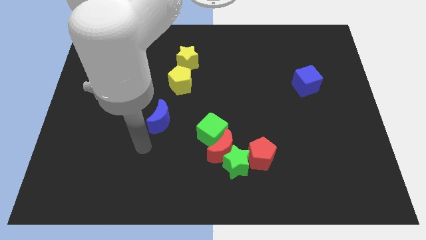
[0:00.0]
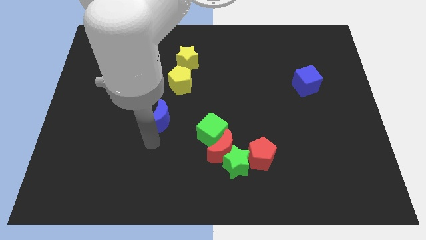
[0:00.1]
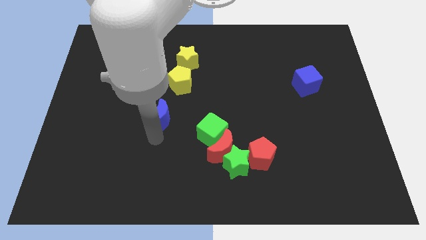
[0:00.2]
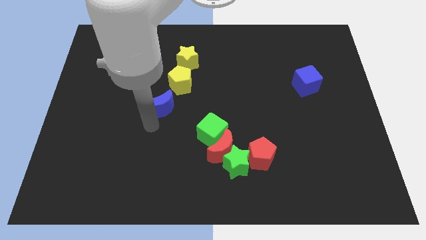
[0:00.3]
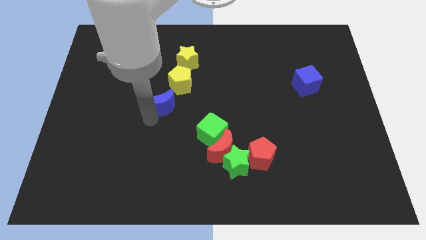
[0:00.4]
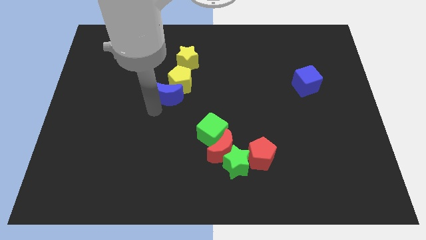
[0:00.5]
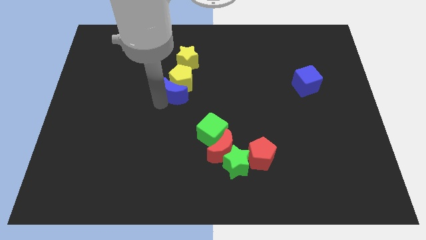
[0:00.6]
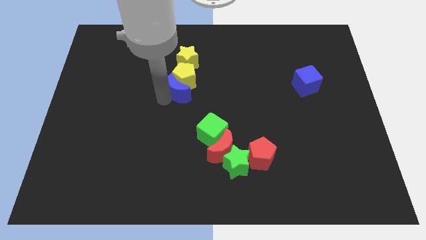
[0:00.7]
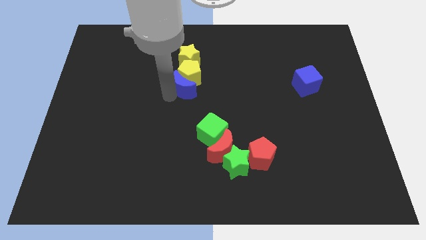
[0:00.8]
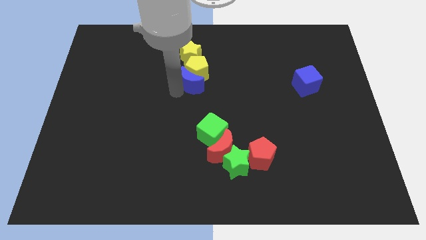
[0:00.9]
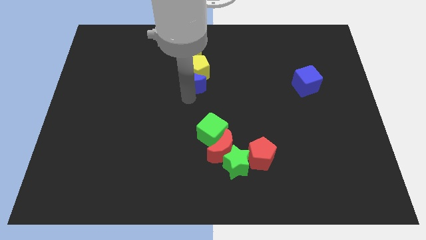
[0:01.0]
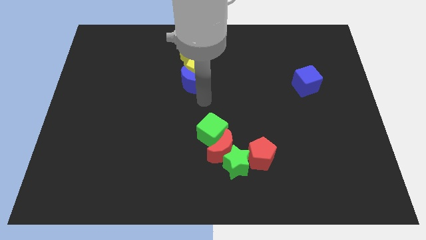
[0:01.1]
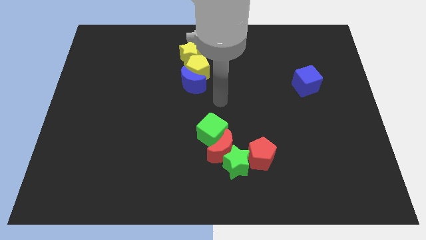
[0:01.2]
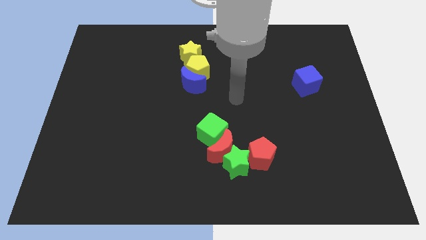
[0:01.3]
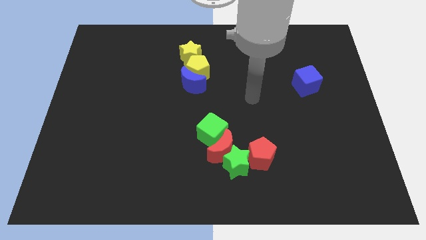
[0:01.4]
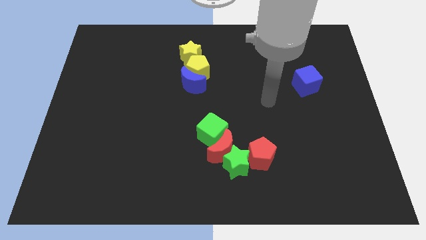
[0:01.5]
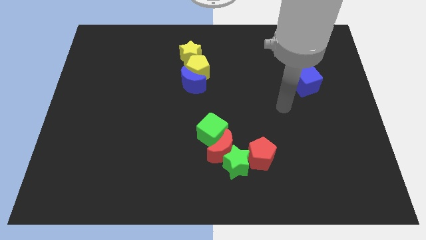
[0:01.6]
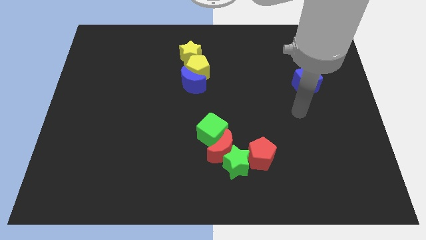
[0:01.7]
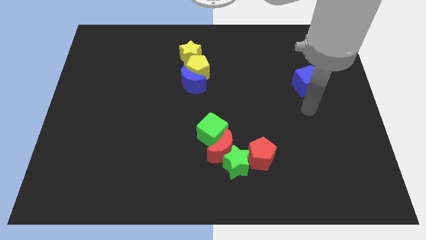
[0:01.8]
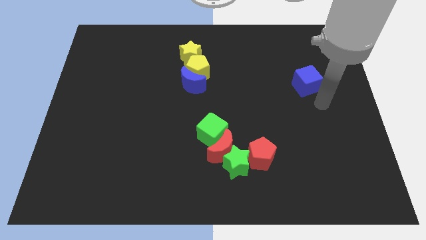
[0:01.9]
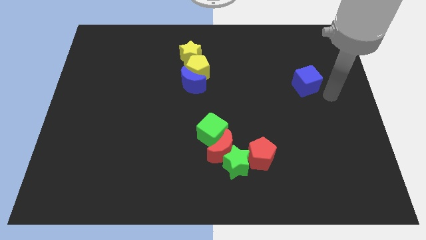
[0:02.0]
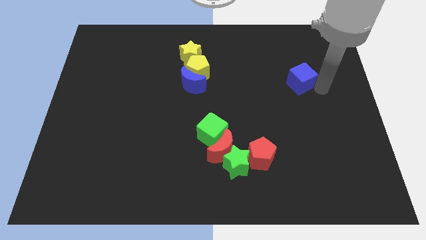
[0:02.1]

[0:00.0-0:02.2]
slide the blue crescent into the yellow pentagon

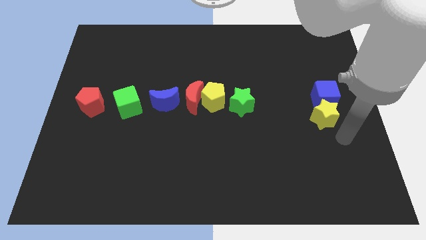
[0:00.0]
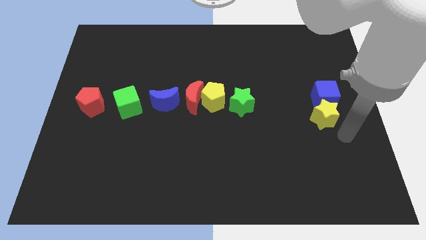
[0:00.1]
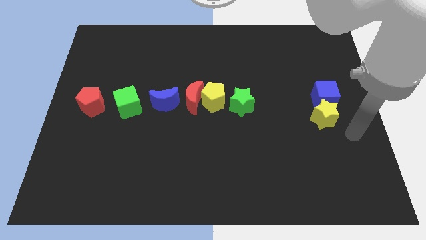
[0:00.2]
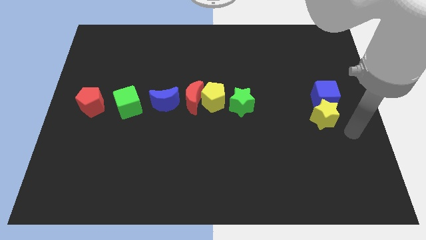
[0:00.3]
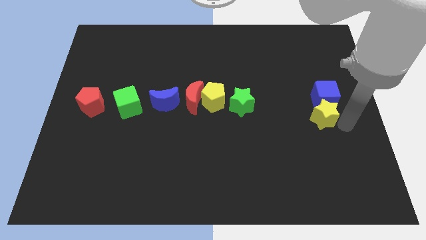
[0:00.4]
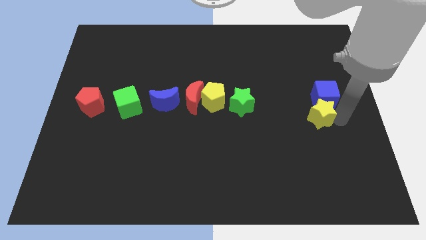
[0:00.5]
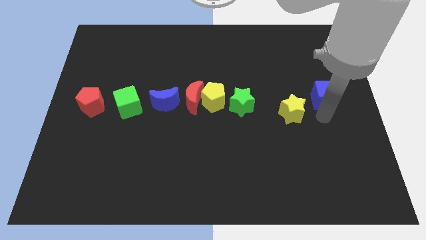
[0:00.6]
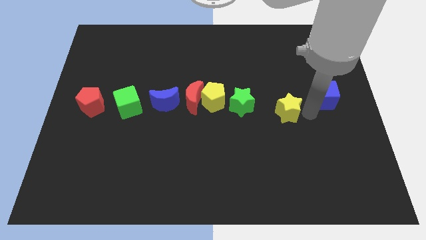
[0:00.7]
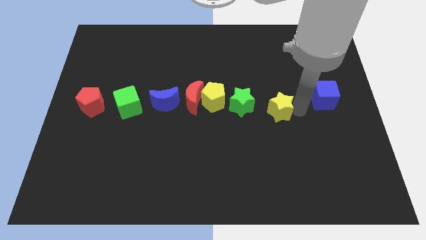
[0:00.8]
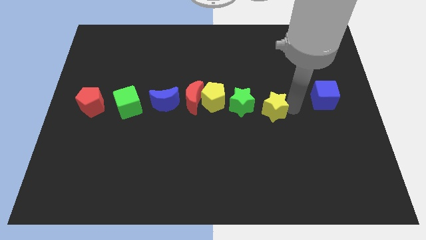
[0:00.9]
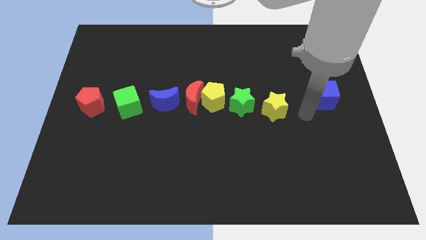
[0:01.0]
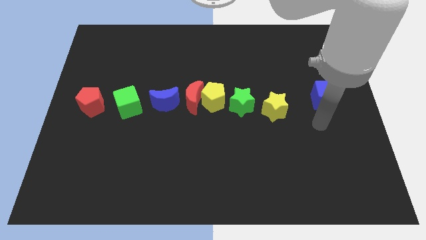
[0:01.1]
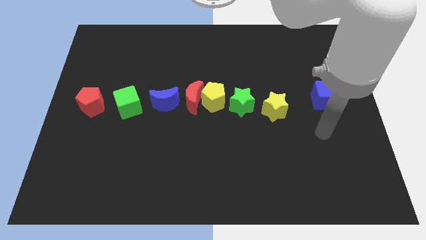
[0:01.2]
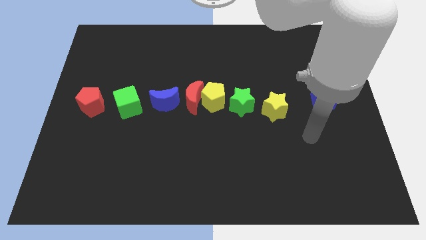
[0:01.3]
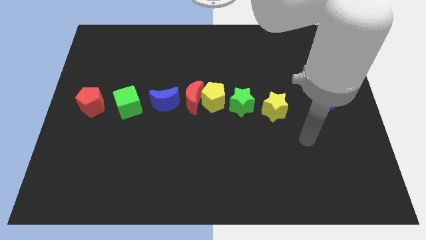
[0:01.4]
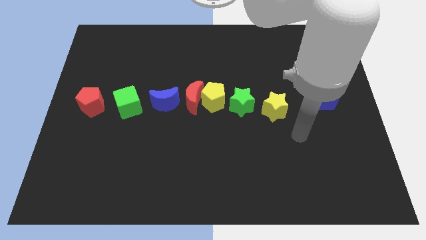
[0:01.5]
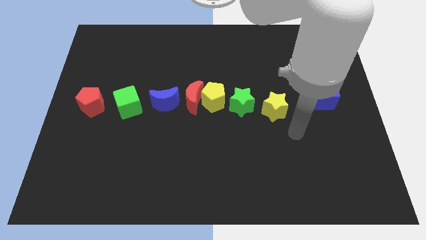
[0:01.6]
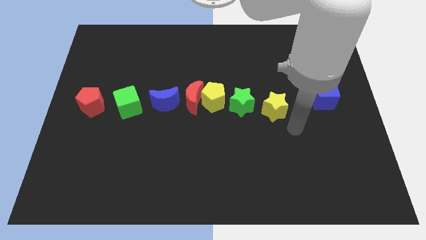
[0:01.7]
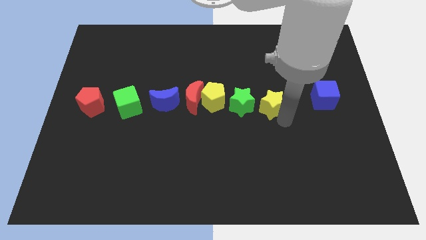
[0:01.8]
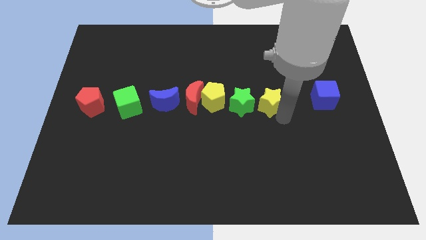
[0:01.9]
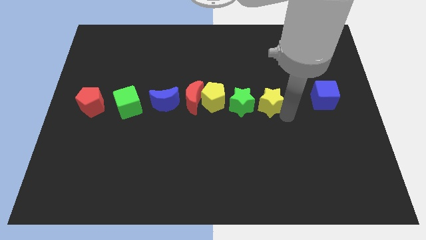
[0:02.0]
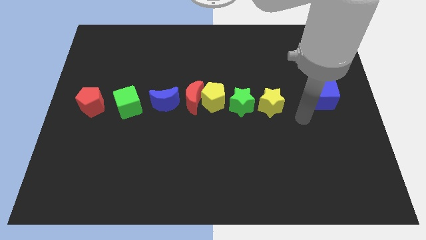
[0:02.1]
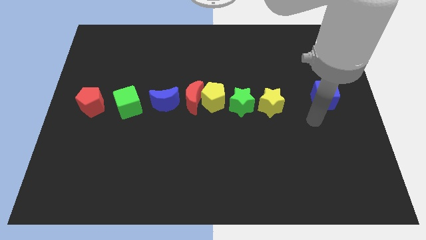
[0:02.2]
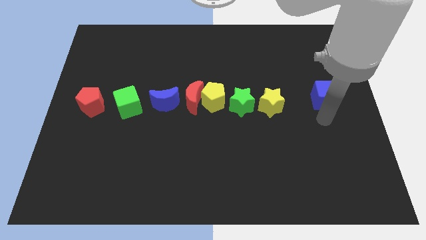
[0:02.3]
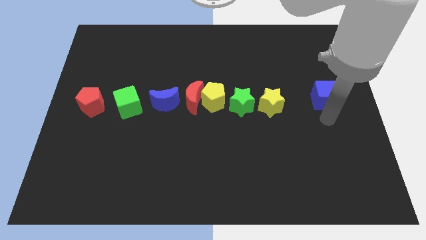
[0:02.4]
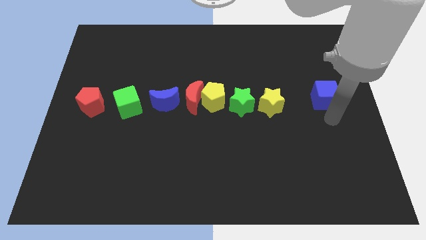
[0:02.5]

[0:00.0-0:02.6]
push the yellow star to the right of the green star

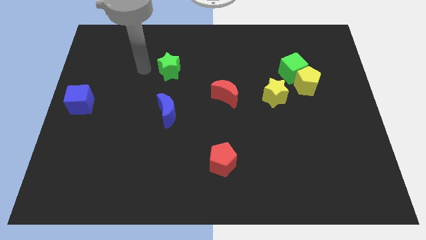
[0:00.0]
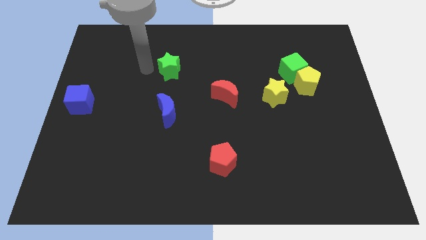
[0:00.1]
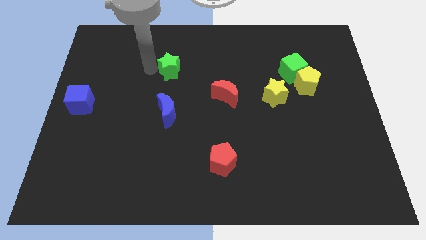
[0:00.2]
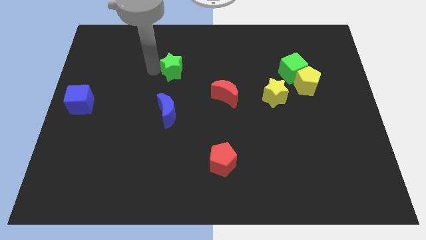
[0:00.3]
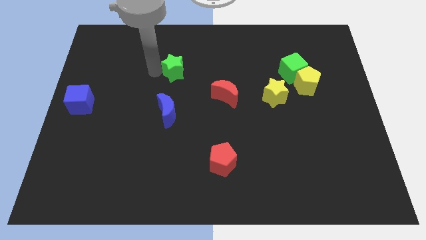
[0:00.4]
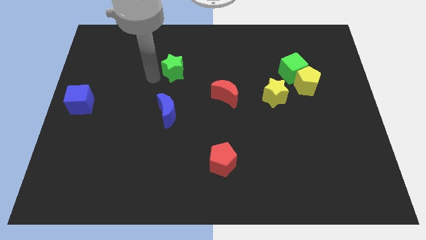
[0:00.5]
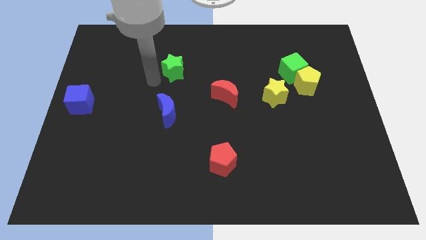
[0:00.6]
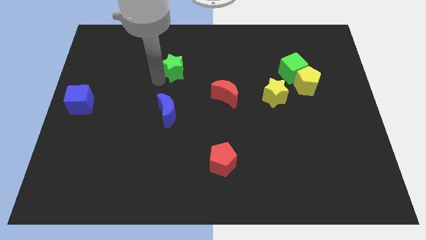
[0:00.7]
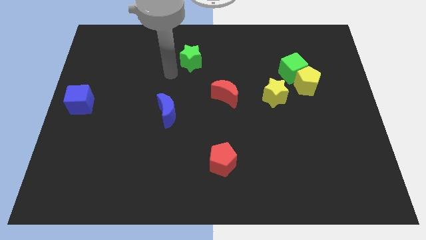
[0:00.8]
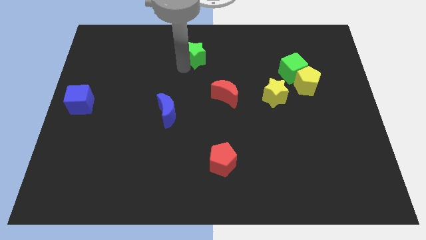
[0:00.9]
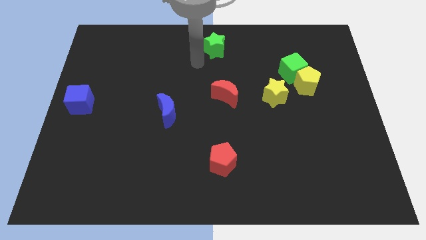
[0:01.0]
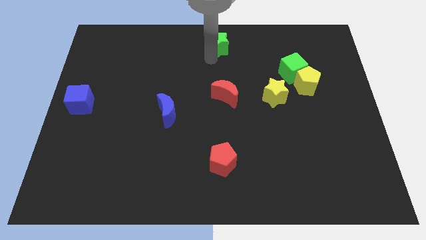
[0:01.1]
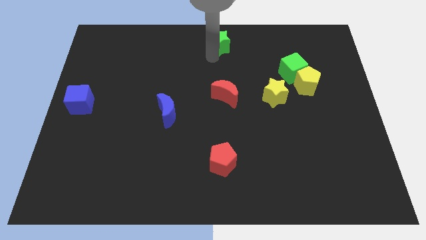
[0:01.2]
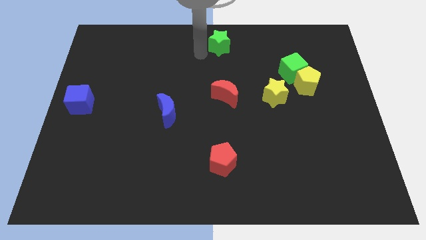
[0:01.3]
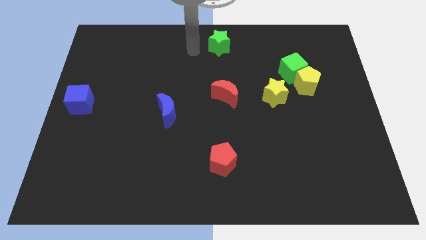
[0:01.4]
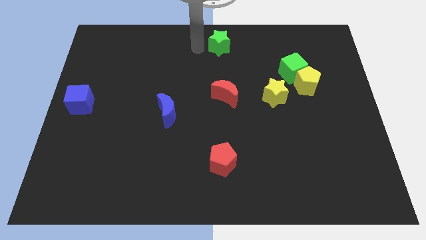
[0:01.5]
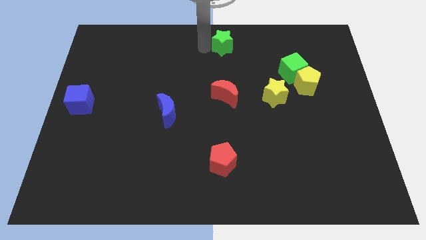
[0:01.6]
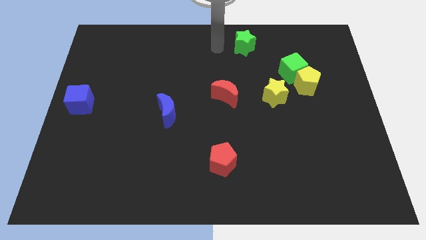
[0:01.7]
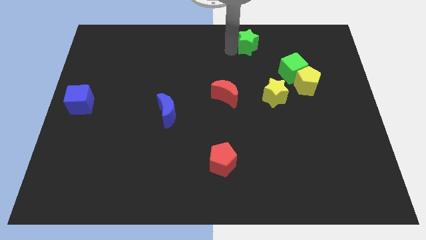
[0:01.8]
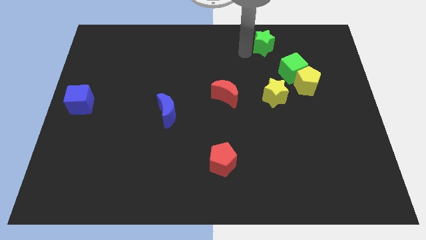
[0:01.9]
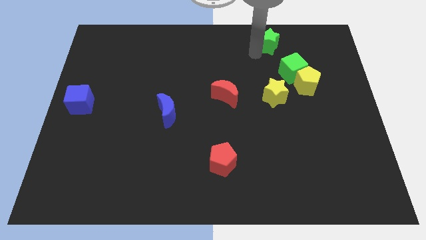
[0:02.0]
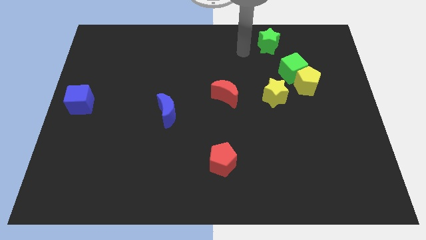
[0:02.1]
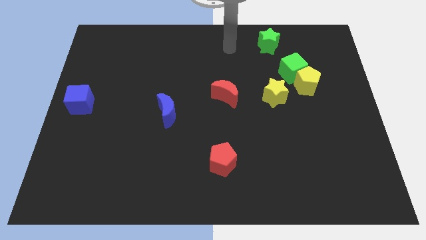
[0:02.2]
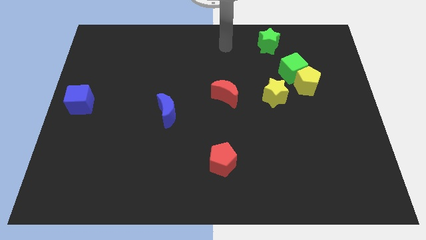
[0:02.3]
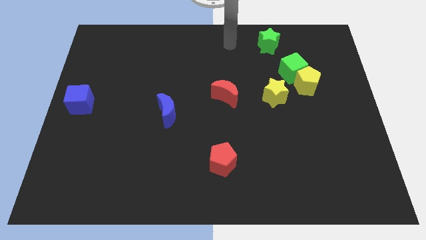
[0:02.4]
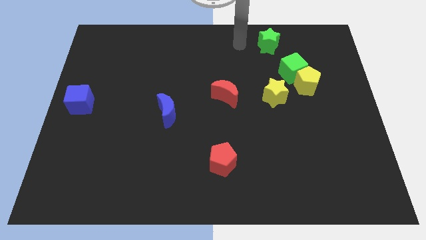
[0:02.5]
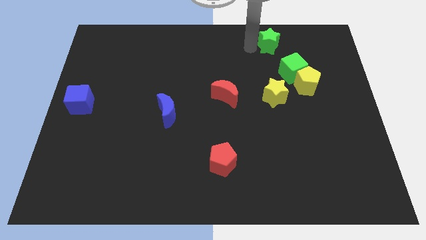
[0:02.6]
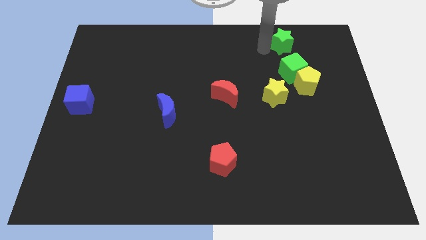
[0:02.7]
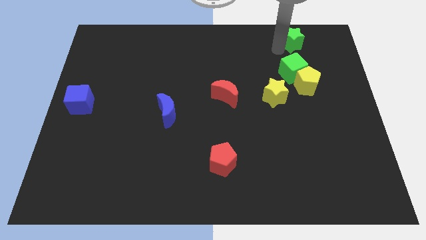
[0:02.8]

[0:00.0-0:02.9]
put the green star above the green cube

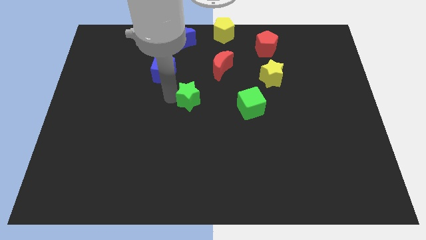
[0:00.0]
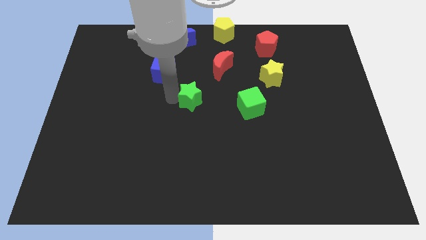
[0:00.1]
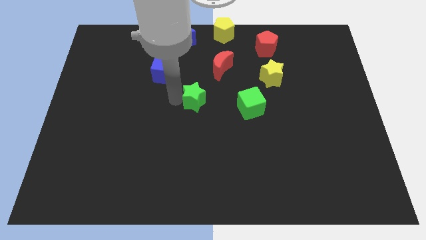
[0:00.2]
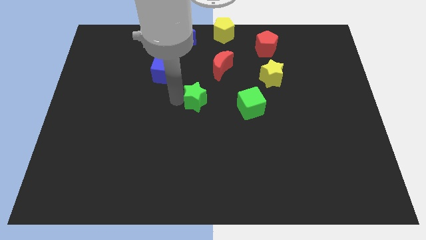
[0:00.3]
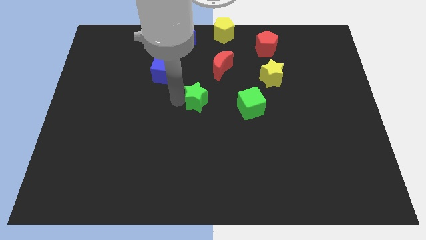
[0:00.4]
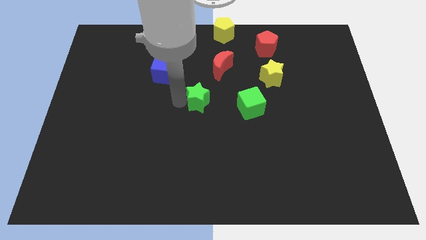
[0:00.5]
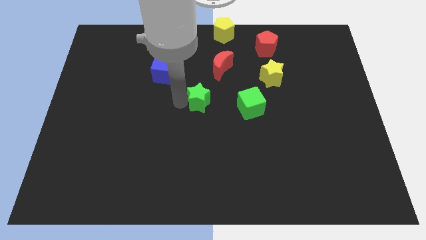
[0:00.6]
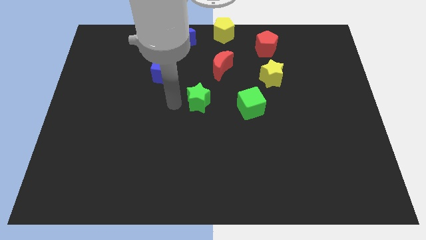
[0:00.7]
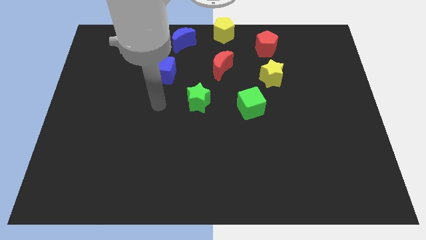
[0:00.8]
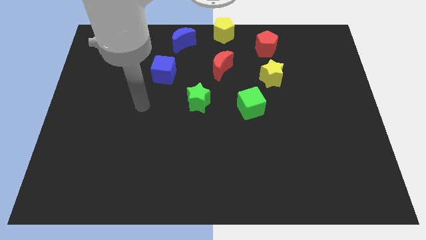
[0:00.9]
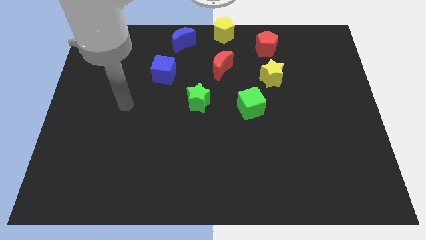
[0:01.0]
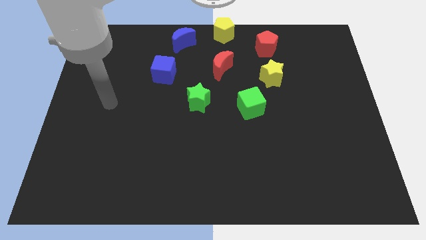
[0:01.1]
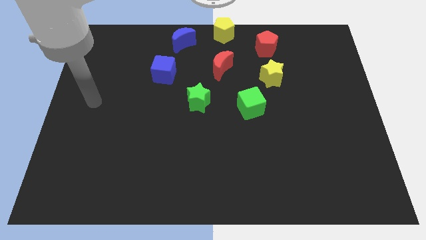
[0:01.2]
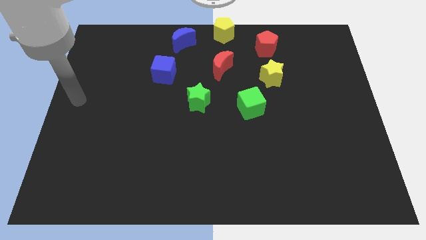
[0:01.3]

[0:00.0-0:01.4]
move the green star to the left of the green cube
